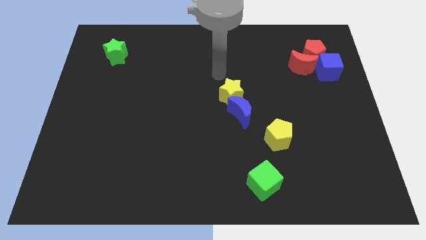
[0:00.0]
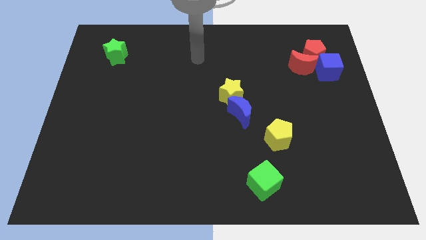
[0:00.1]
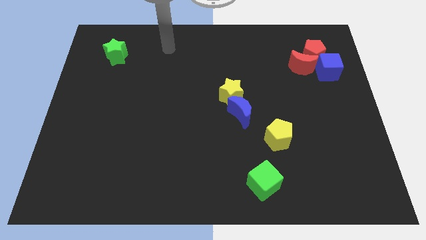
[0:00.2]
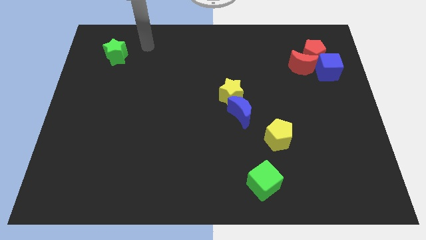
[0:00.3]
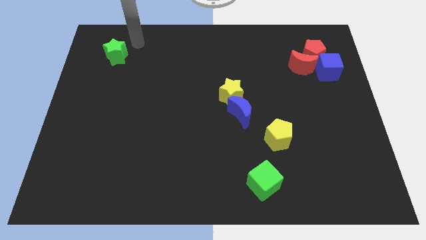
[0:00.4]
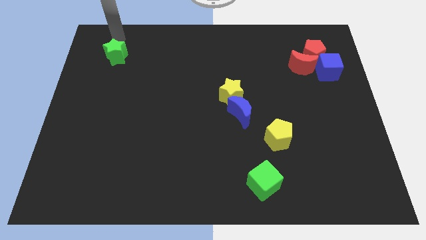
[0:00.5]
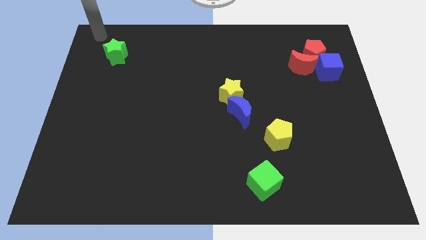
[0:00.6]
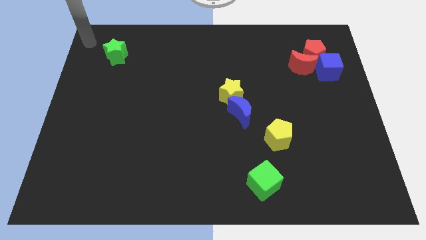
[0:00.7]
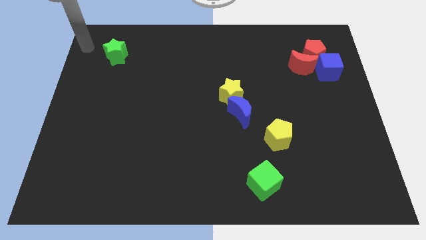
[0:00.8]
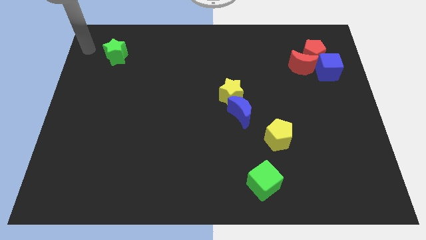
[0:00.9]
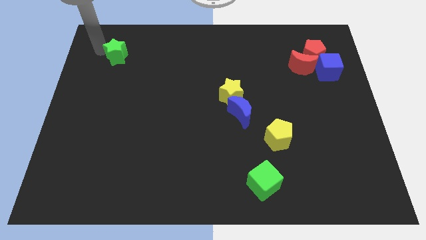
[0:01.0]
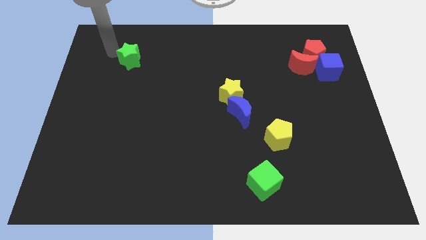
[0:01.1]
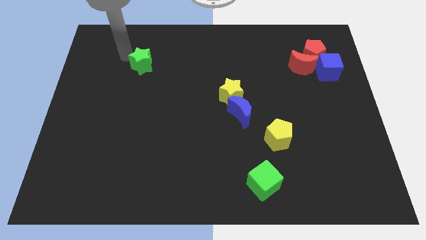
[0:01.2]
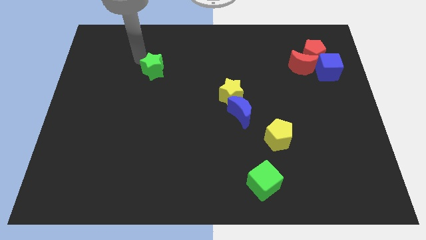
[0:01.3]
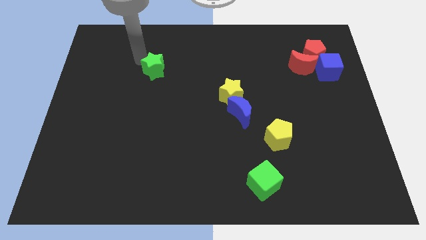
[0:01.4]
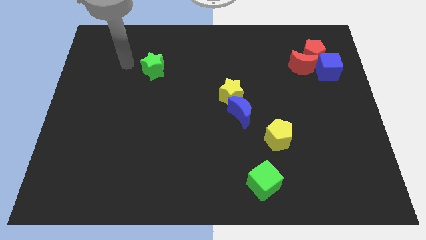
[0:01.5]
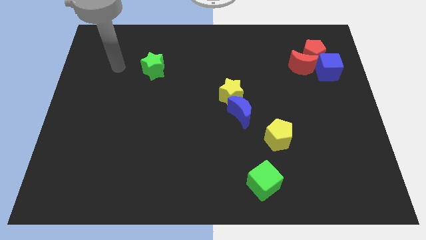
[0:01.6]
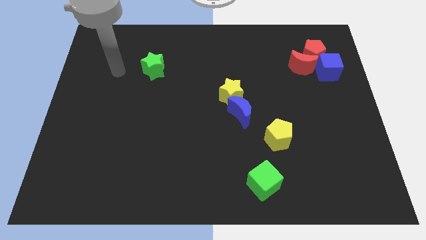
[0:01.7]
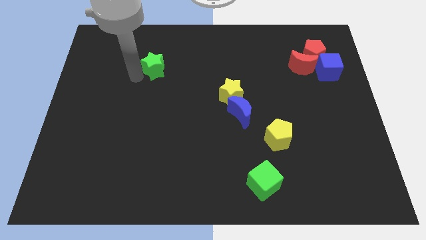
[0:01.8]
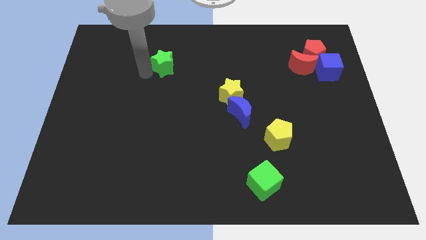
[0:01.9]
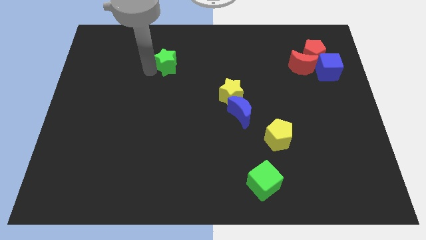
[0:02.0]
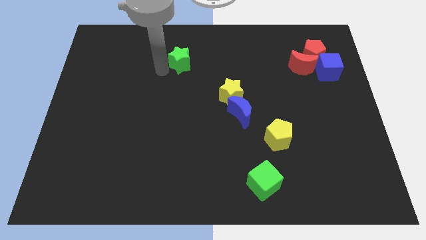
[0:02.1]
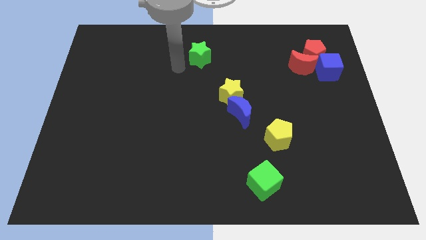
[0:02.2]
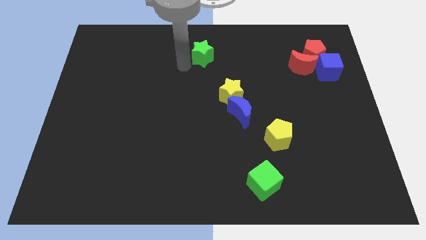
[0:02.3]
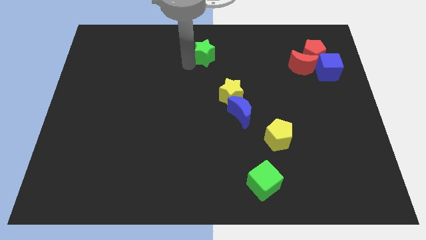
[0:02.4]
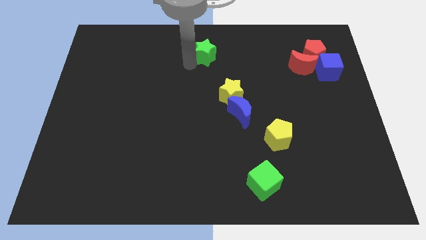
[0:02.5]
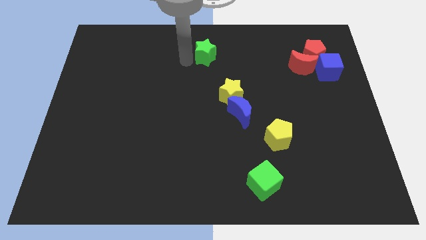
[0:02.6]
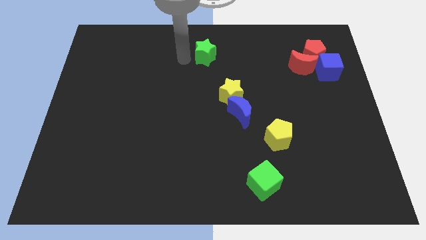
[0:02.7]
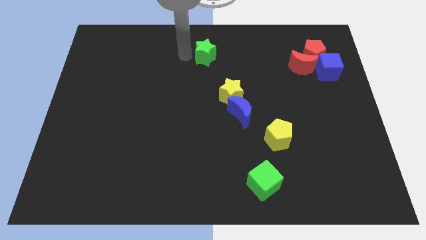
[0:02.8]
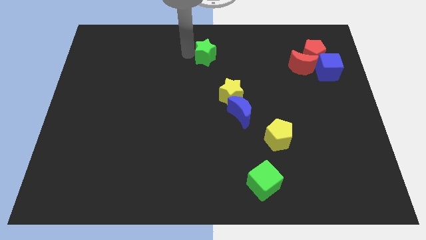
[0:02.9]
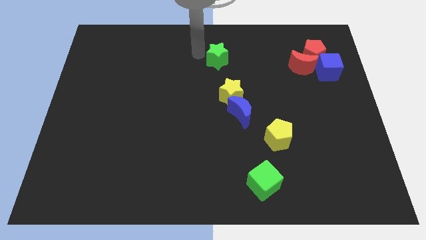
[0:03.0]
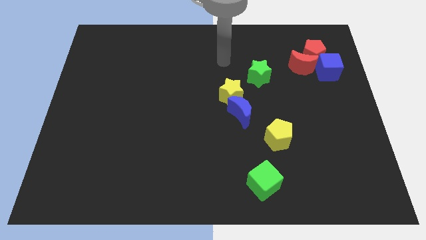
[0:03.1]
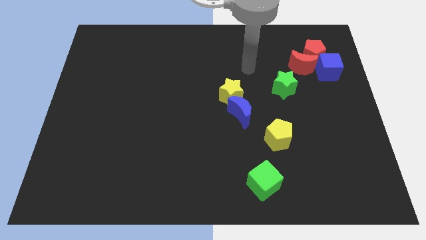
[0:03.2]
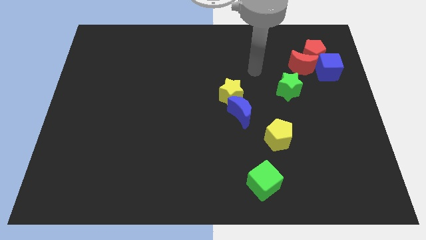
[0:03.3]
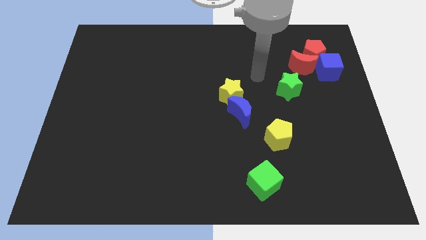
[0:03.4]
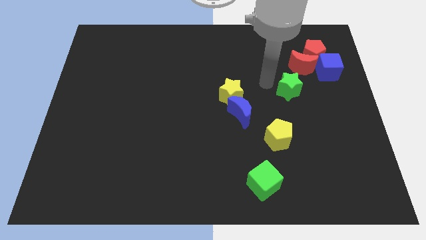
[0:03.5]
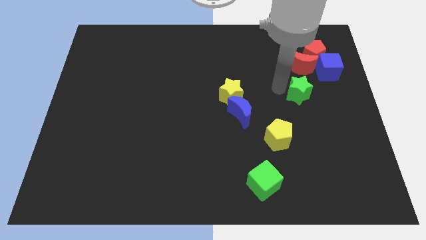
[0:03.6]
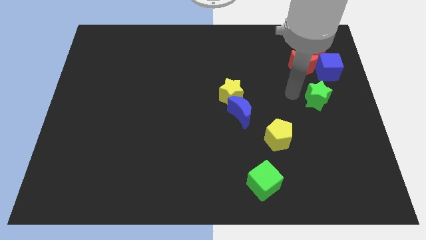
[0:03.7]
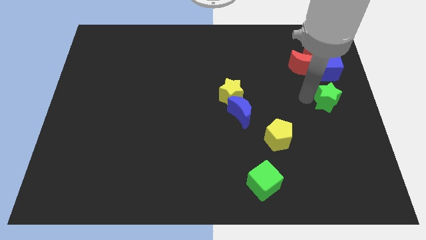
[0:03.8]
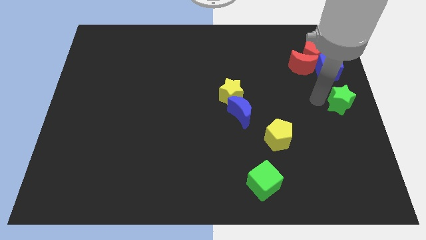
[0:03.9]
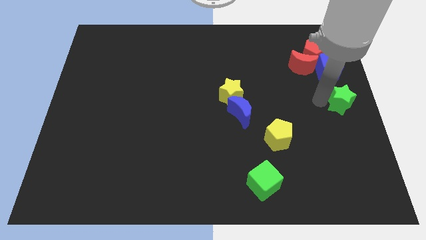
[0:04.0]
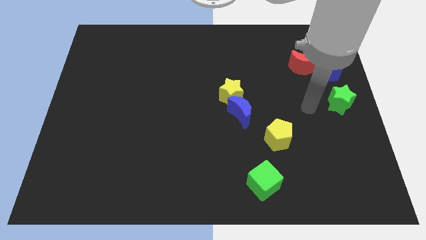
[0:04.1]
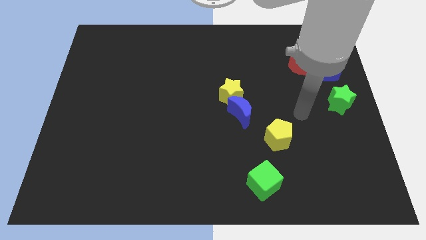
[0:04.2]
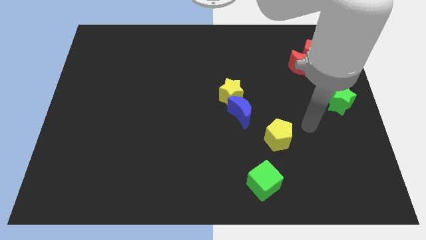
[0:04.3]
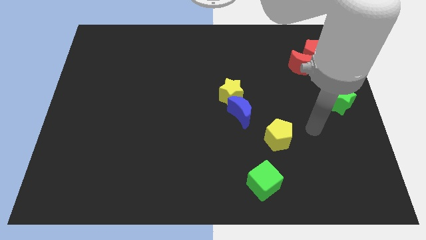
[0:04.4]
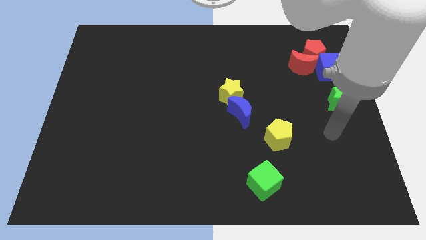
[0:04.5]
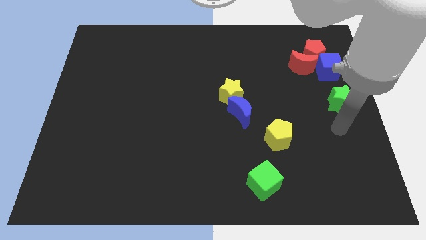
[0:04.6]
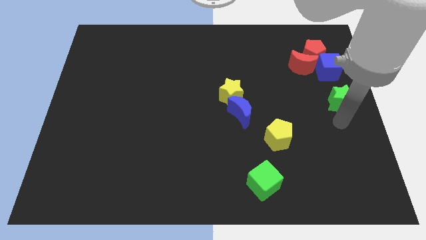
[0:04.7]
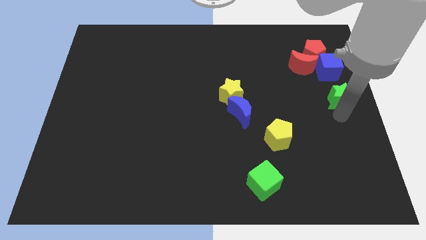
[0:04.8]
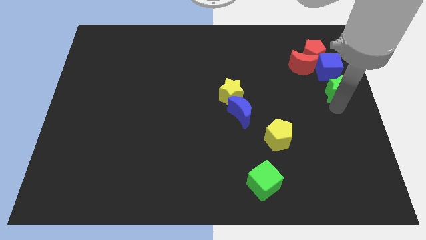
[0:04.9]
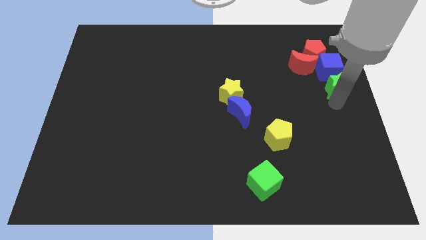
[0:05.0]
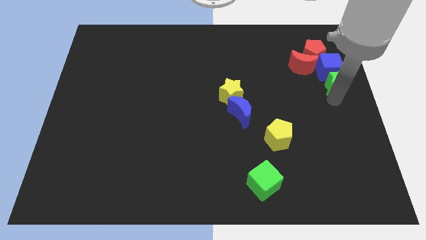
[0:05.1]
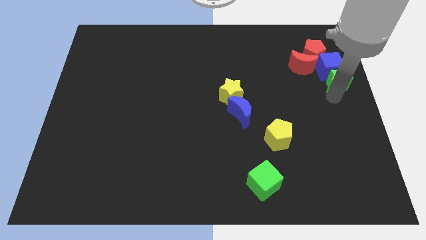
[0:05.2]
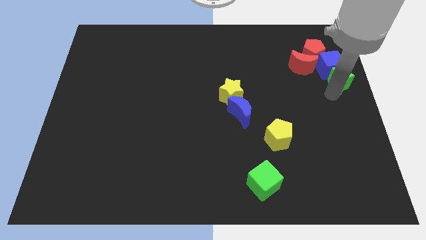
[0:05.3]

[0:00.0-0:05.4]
push the green star next to the blue cube

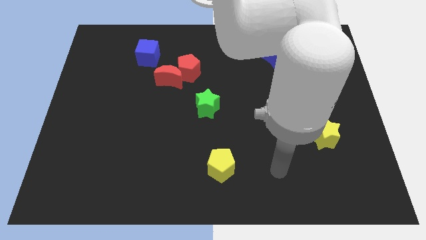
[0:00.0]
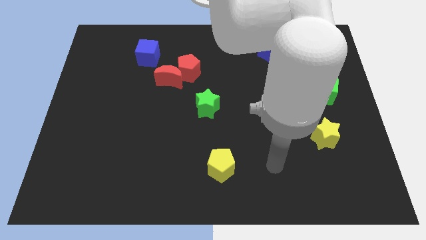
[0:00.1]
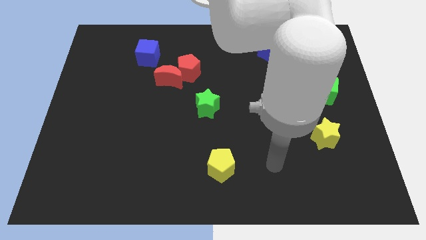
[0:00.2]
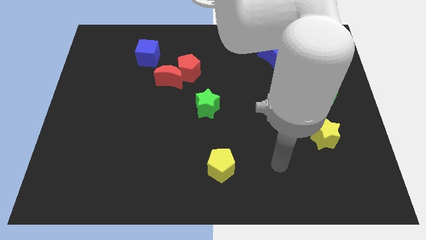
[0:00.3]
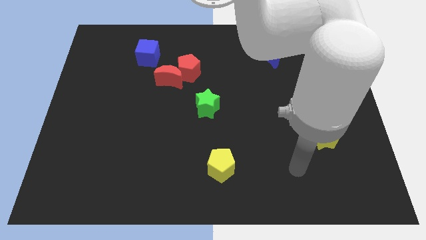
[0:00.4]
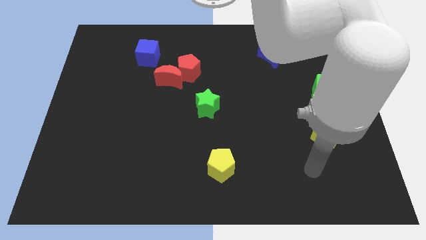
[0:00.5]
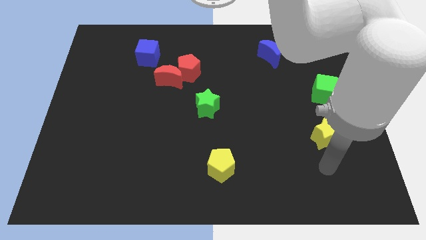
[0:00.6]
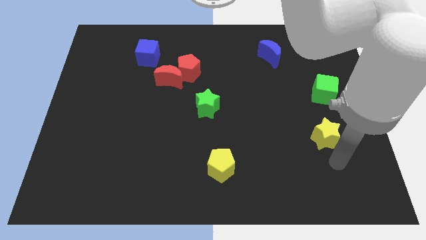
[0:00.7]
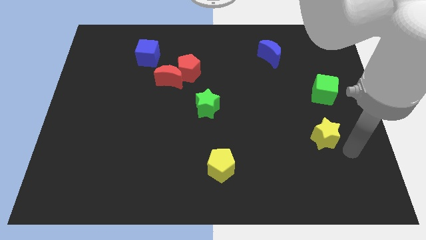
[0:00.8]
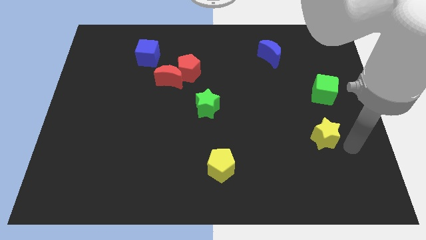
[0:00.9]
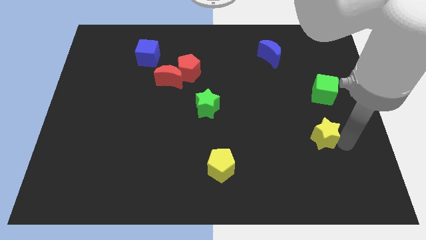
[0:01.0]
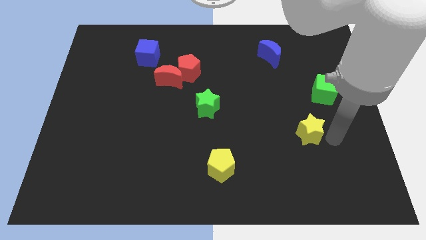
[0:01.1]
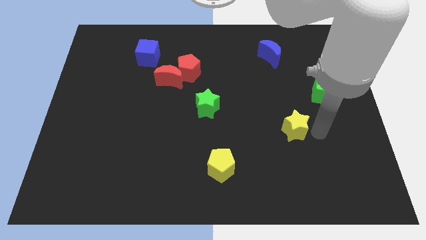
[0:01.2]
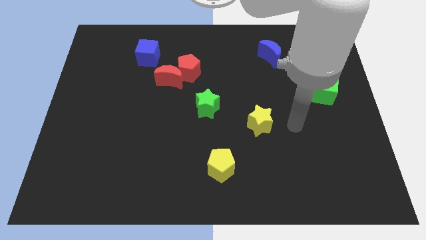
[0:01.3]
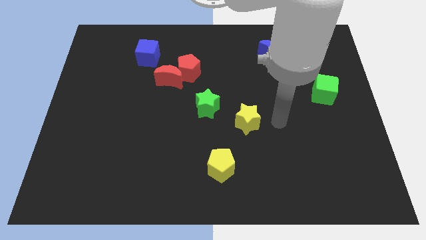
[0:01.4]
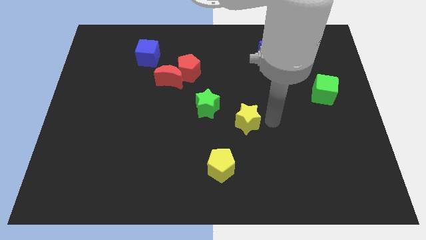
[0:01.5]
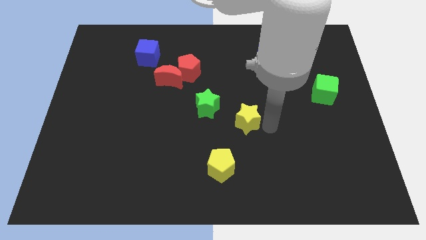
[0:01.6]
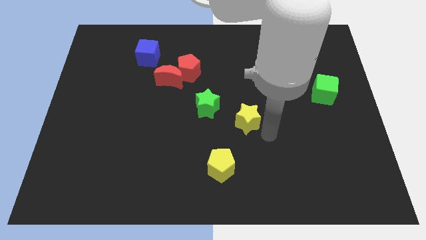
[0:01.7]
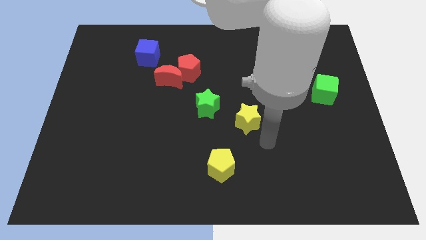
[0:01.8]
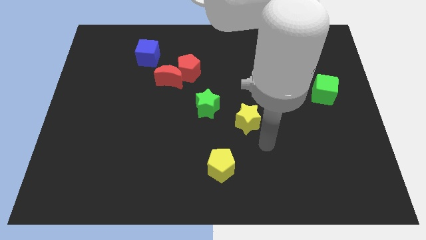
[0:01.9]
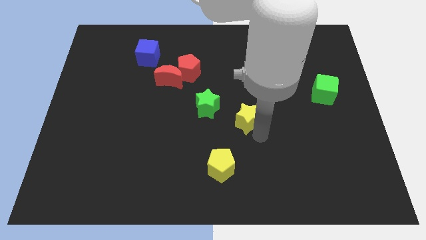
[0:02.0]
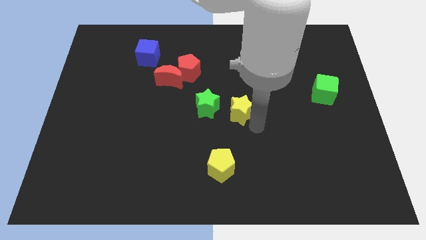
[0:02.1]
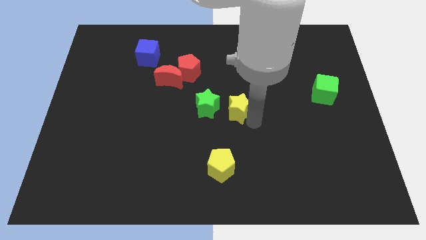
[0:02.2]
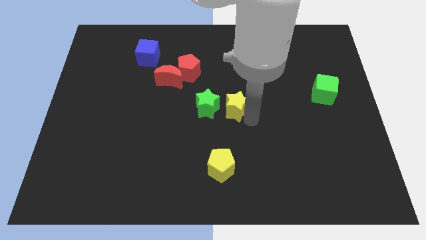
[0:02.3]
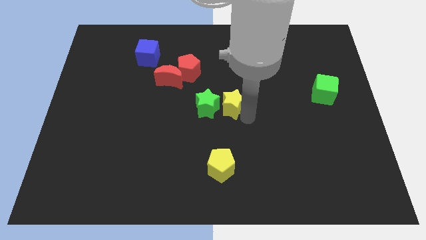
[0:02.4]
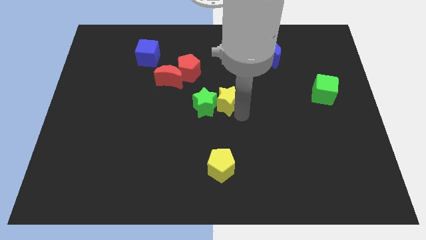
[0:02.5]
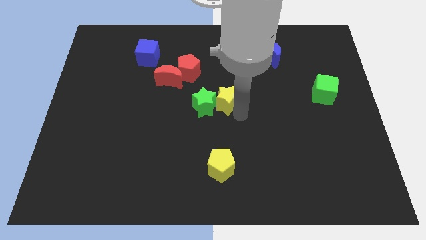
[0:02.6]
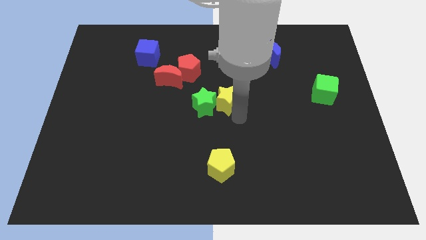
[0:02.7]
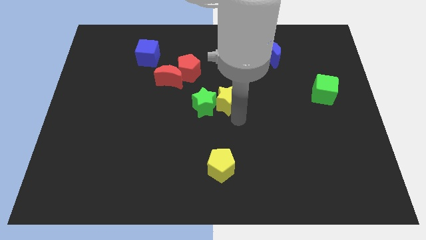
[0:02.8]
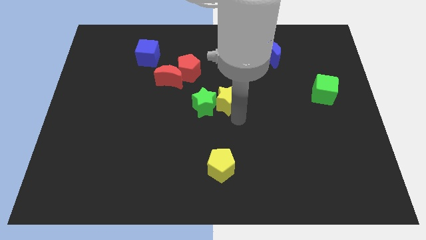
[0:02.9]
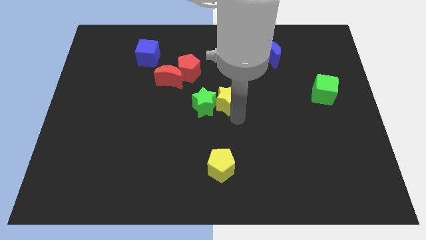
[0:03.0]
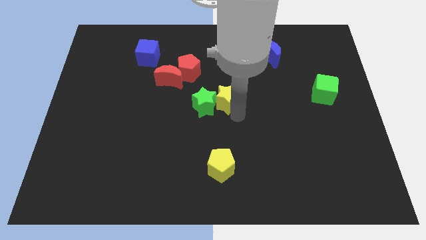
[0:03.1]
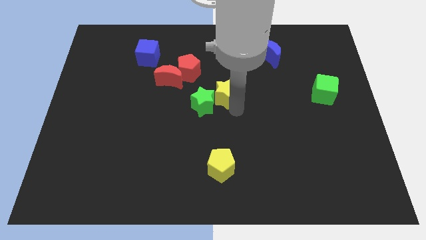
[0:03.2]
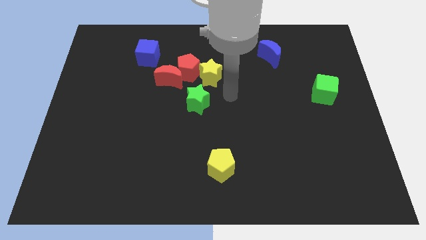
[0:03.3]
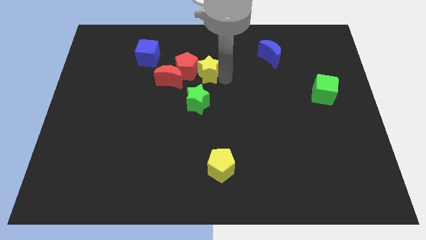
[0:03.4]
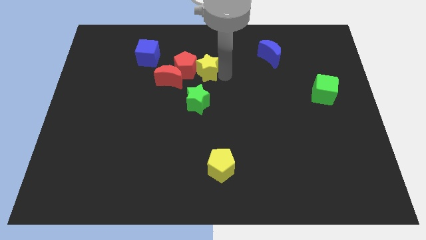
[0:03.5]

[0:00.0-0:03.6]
push the yellow star close to the red pentagon
